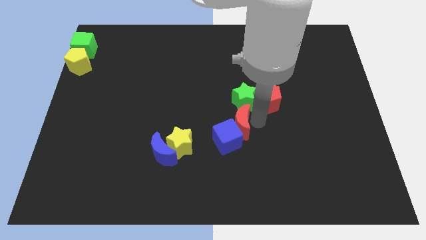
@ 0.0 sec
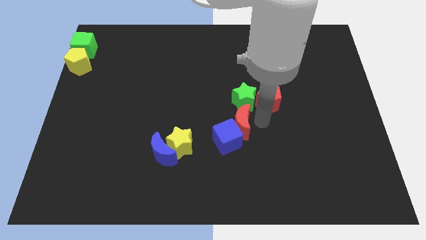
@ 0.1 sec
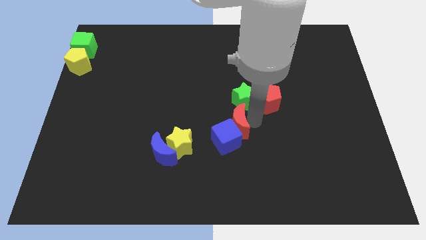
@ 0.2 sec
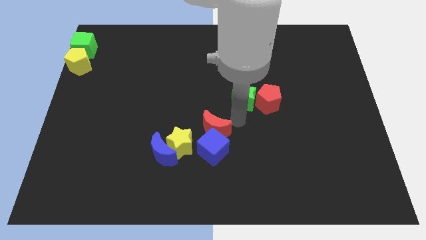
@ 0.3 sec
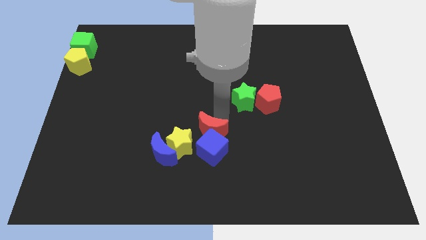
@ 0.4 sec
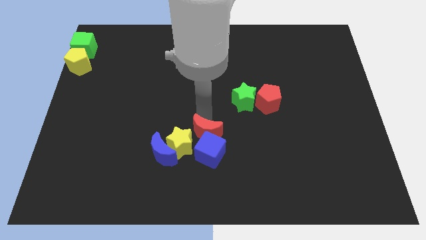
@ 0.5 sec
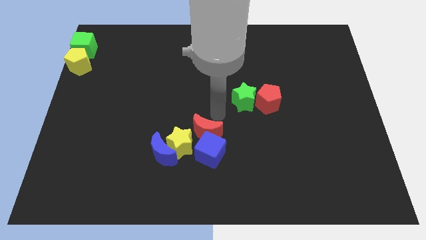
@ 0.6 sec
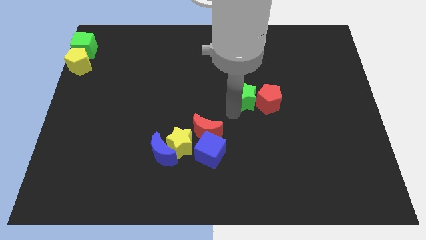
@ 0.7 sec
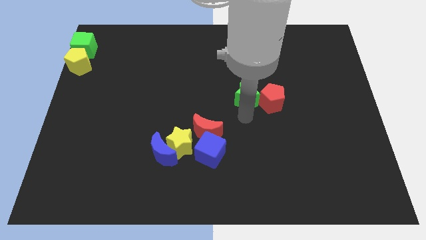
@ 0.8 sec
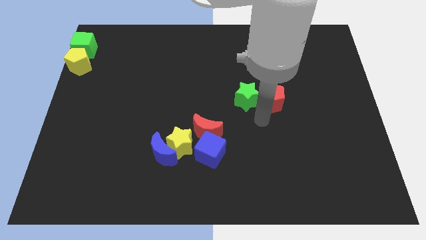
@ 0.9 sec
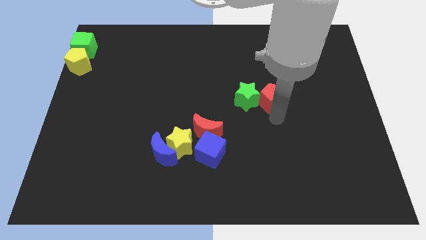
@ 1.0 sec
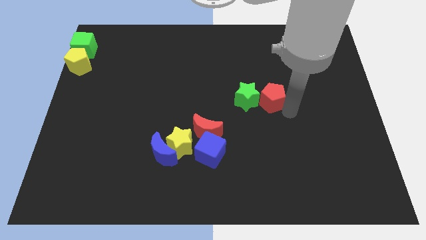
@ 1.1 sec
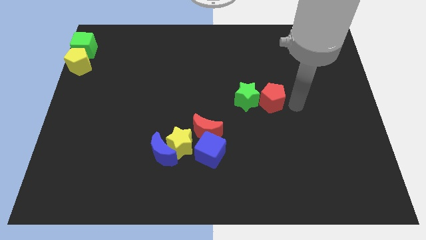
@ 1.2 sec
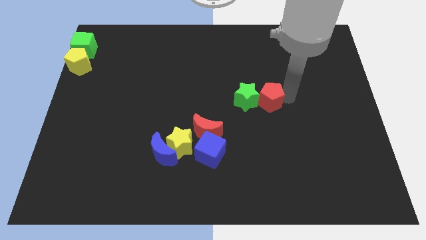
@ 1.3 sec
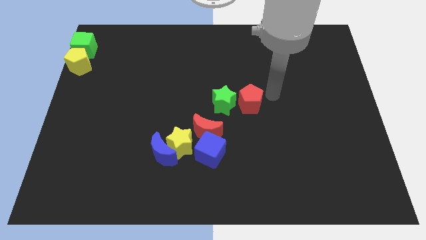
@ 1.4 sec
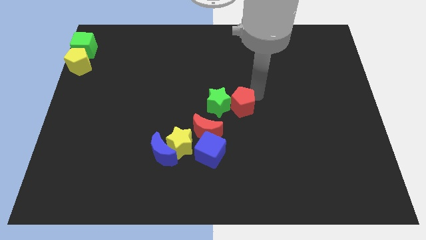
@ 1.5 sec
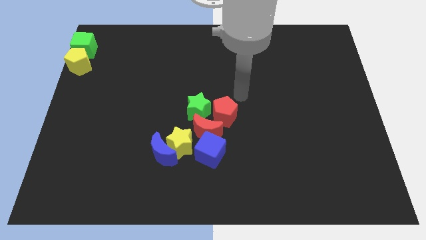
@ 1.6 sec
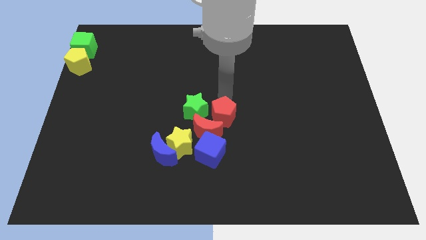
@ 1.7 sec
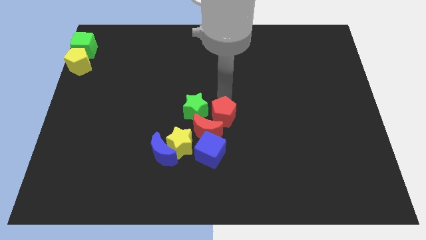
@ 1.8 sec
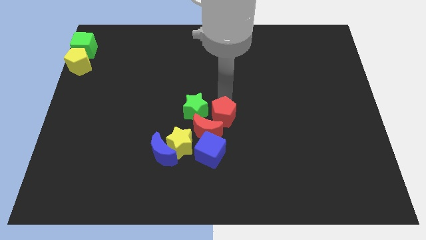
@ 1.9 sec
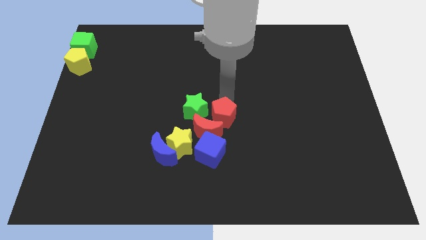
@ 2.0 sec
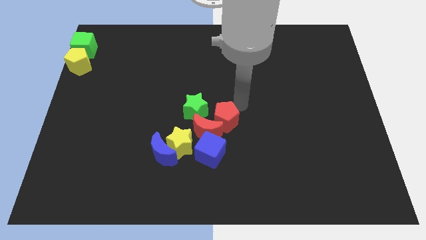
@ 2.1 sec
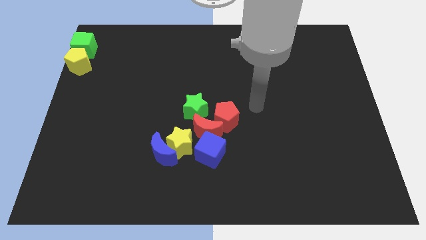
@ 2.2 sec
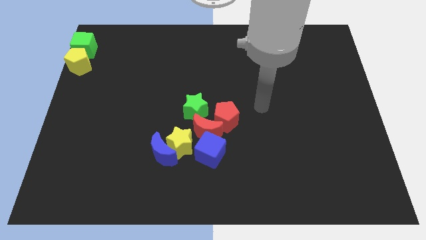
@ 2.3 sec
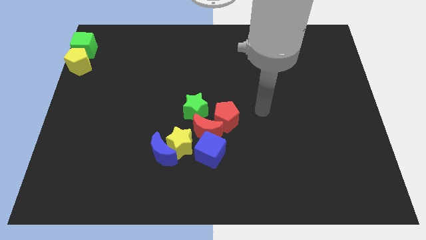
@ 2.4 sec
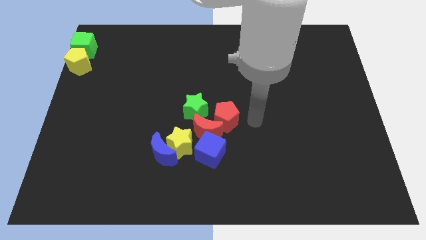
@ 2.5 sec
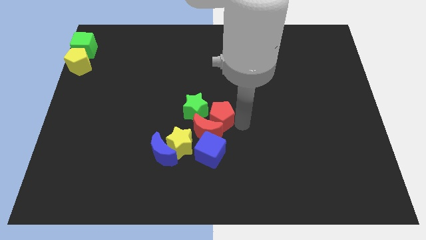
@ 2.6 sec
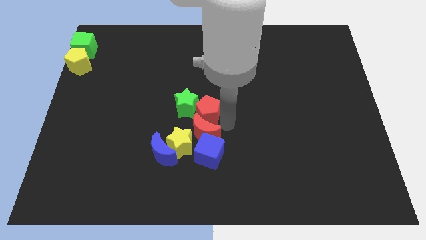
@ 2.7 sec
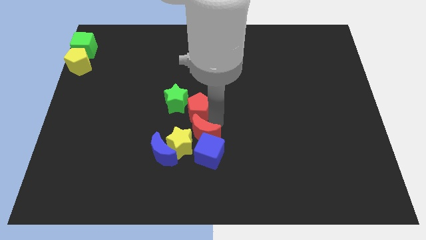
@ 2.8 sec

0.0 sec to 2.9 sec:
move the group of blocks towards the center of the board

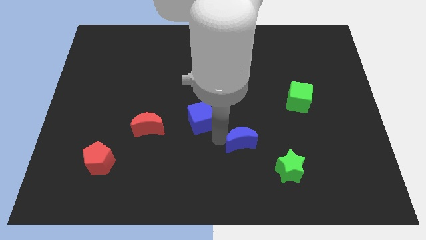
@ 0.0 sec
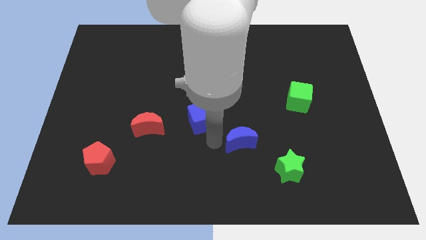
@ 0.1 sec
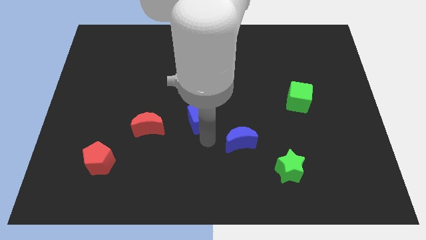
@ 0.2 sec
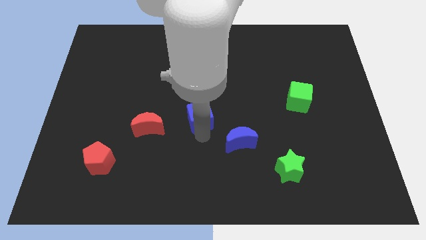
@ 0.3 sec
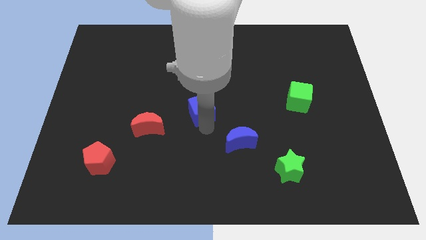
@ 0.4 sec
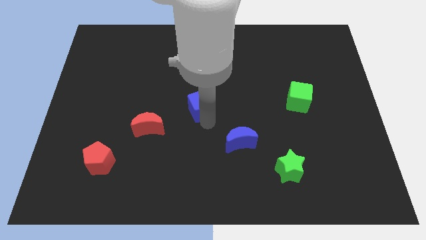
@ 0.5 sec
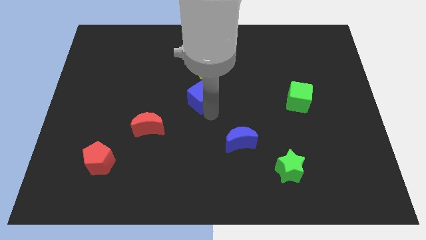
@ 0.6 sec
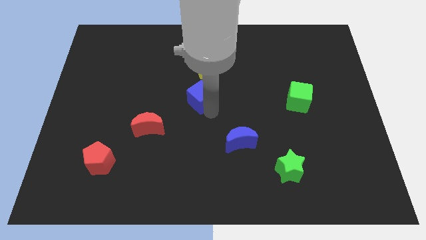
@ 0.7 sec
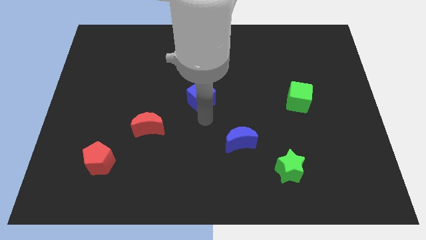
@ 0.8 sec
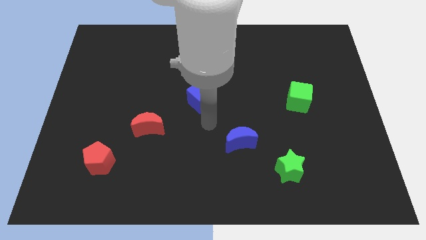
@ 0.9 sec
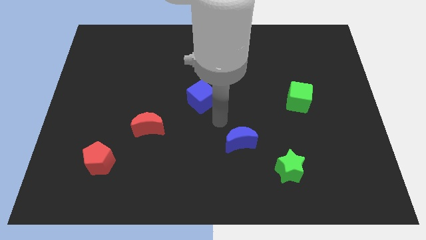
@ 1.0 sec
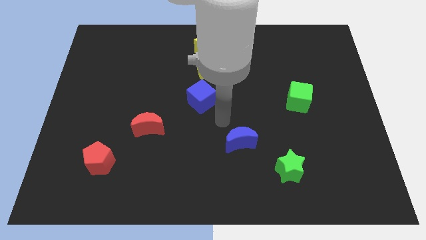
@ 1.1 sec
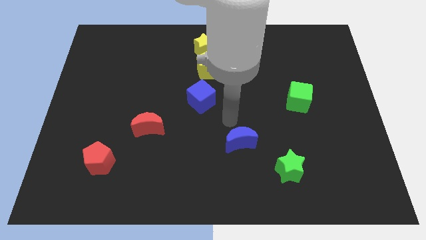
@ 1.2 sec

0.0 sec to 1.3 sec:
push the blue cube below the yellow pentagon

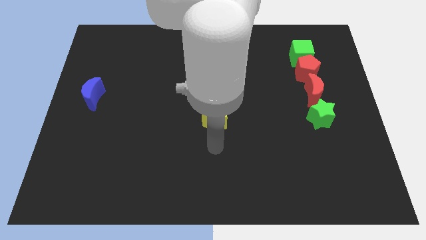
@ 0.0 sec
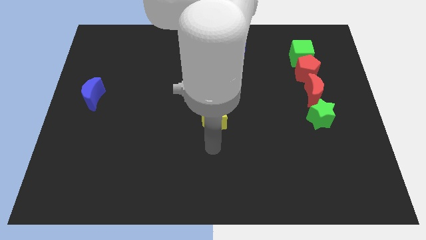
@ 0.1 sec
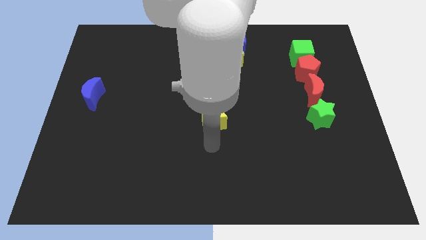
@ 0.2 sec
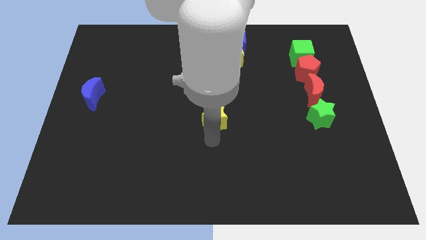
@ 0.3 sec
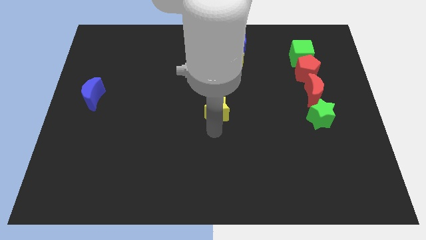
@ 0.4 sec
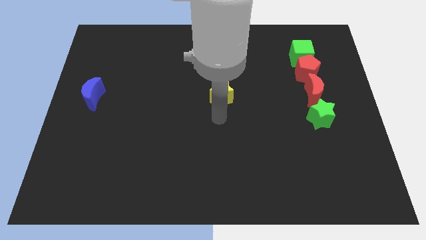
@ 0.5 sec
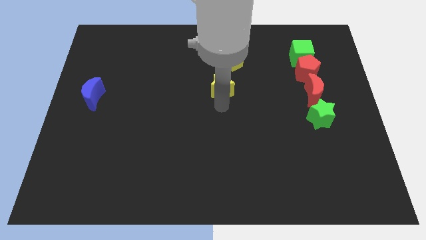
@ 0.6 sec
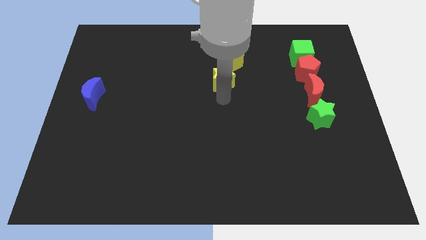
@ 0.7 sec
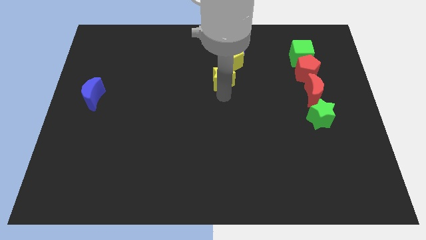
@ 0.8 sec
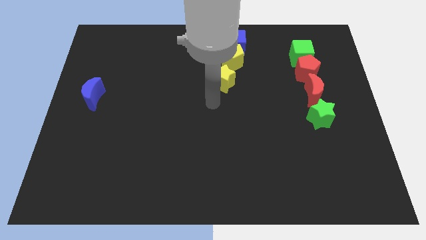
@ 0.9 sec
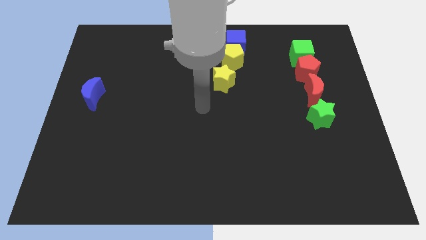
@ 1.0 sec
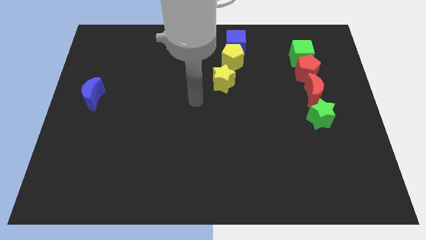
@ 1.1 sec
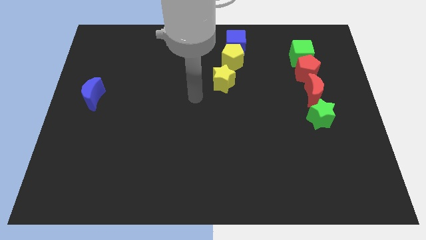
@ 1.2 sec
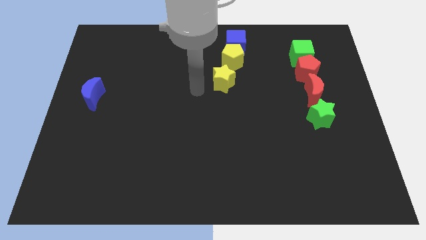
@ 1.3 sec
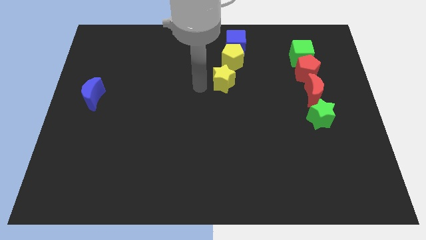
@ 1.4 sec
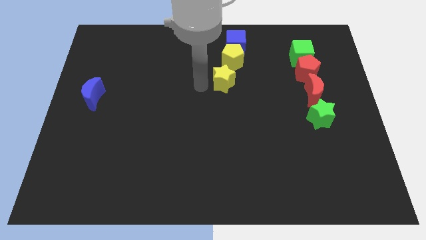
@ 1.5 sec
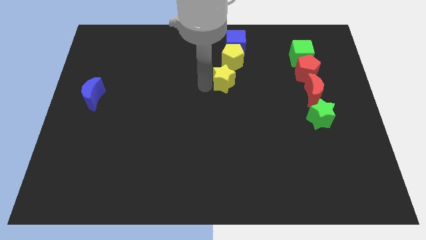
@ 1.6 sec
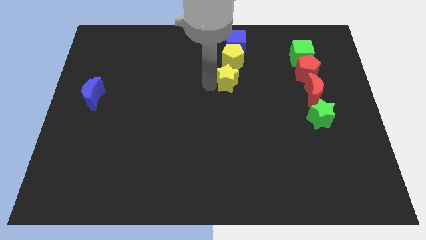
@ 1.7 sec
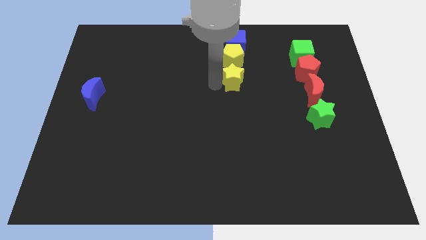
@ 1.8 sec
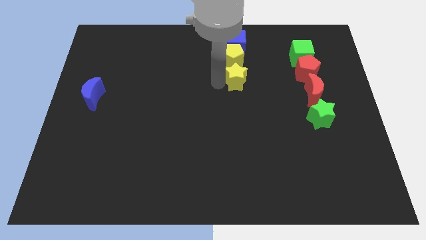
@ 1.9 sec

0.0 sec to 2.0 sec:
move yellow star below the yellow pentagon

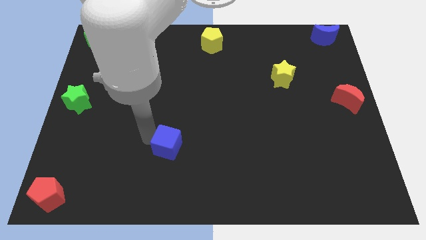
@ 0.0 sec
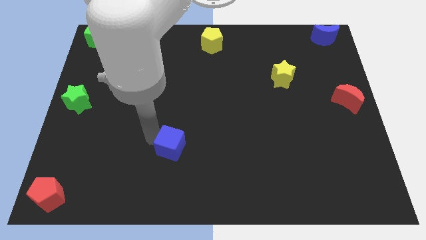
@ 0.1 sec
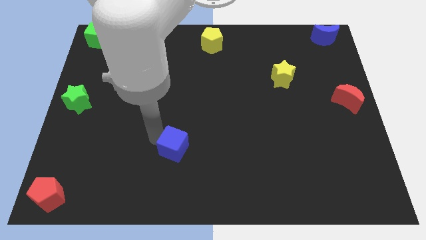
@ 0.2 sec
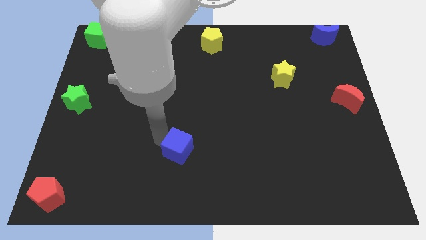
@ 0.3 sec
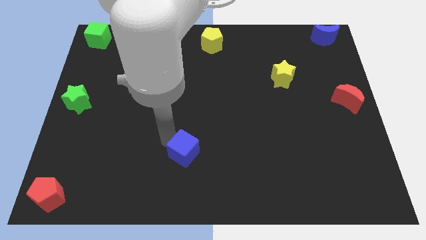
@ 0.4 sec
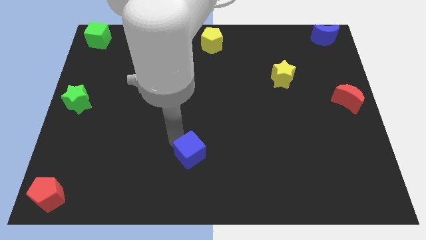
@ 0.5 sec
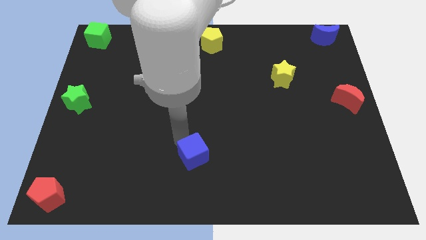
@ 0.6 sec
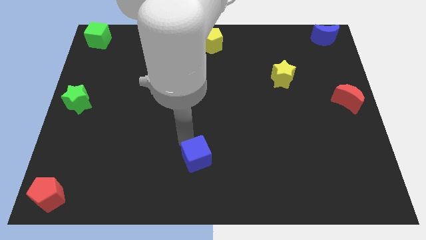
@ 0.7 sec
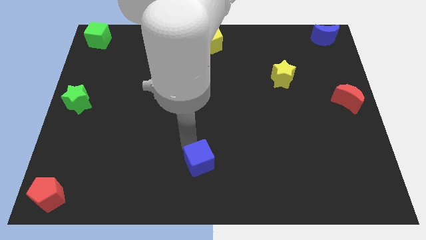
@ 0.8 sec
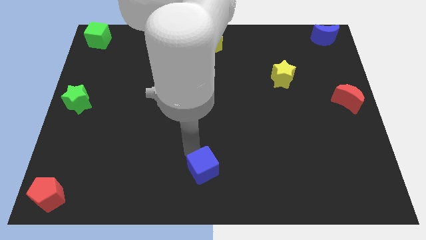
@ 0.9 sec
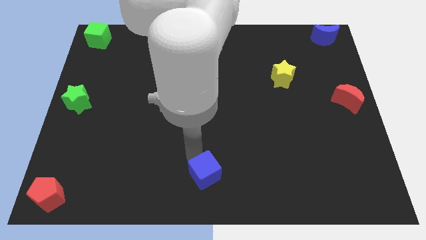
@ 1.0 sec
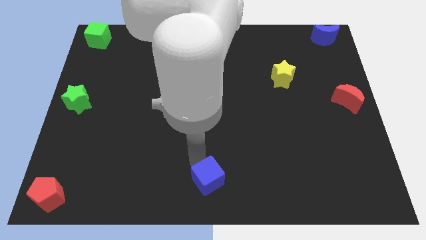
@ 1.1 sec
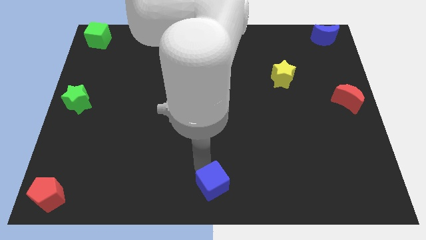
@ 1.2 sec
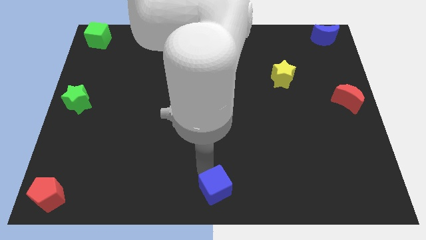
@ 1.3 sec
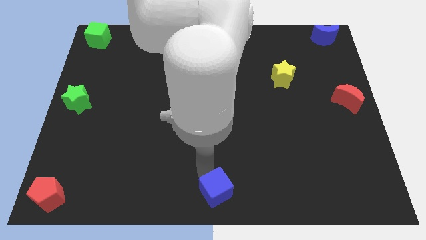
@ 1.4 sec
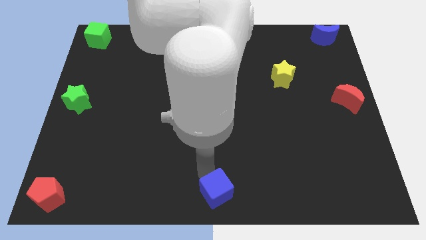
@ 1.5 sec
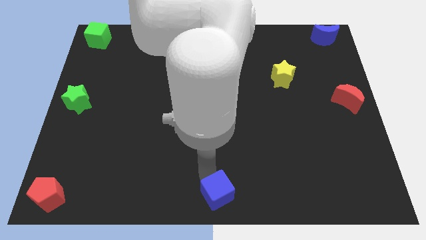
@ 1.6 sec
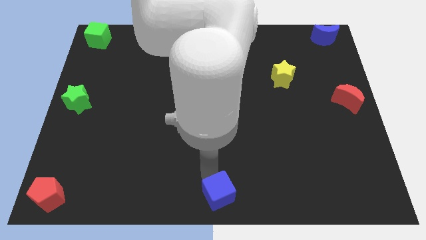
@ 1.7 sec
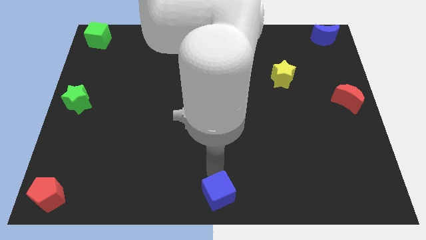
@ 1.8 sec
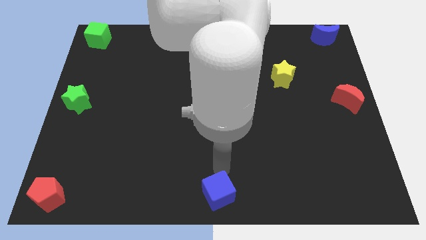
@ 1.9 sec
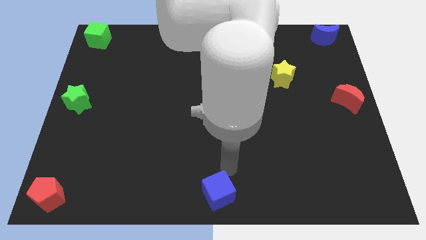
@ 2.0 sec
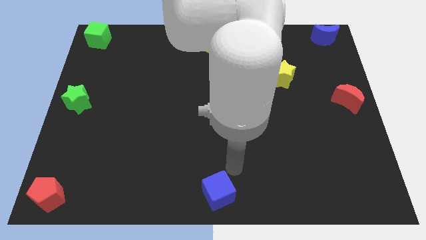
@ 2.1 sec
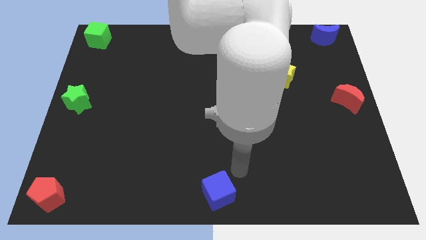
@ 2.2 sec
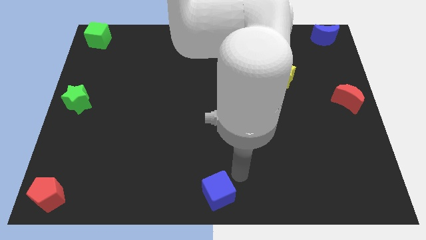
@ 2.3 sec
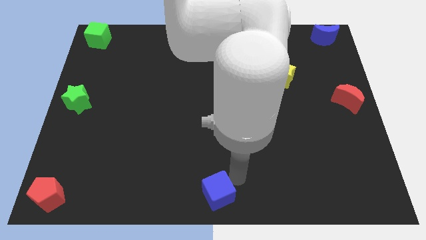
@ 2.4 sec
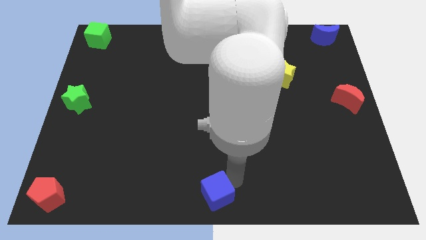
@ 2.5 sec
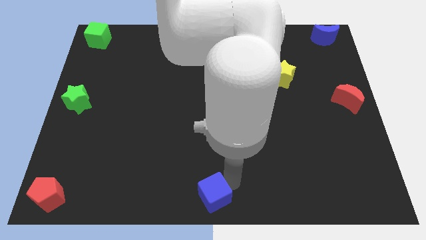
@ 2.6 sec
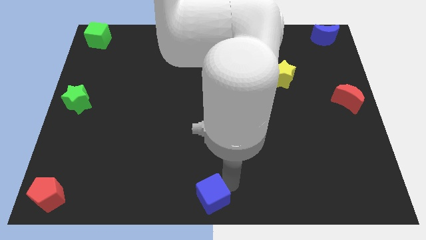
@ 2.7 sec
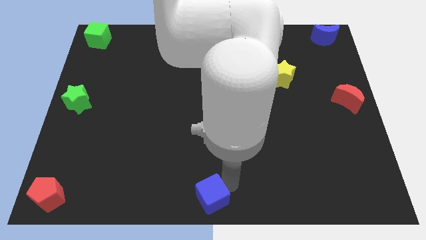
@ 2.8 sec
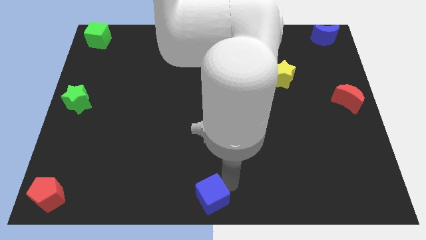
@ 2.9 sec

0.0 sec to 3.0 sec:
place the blue cube at the bottom center of the board
